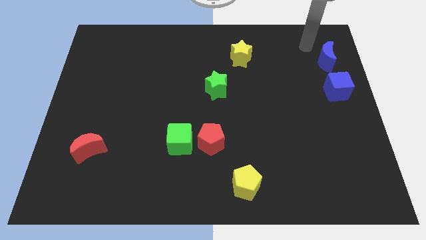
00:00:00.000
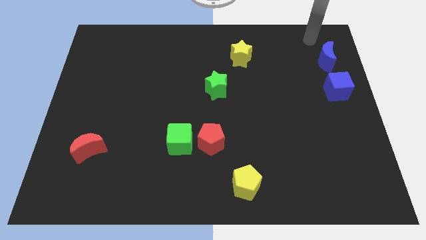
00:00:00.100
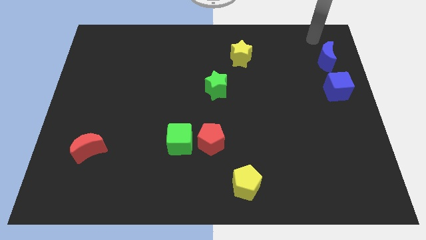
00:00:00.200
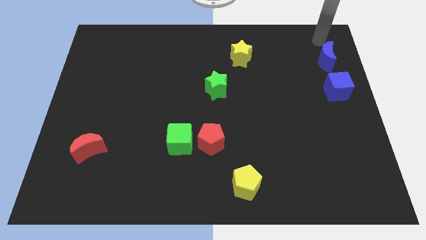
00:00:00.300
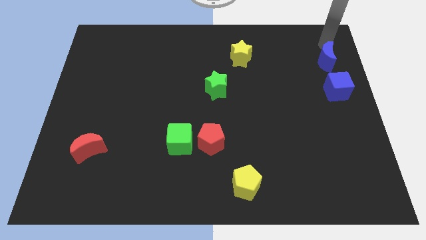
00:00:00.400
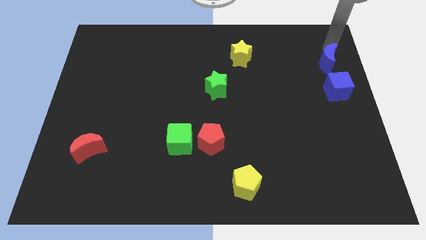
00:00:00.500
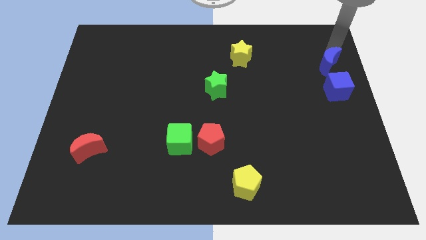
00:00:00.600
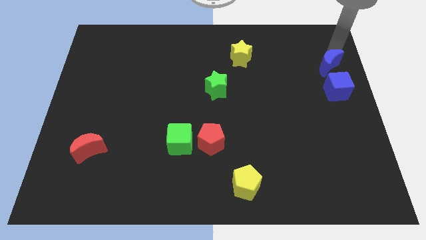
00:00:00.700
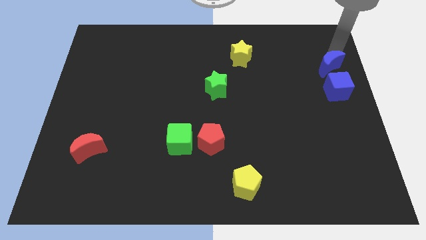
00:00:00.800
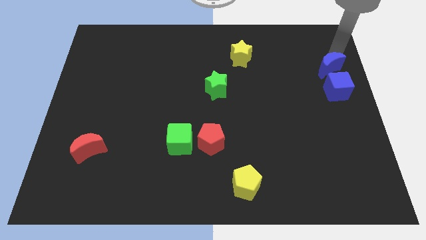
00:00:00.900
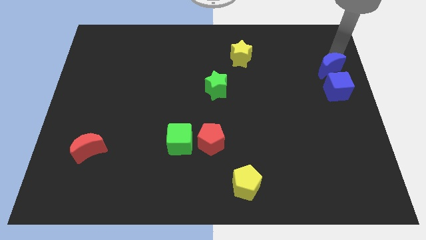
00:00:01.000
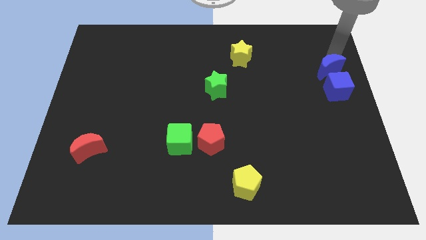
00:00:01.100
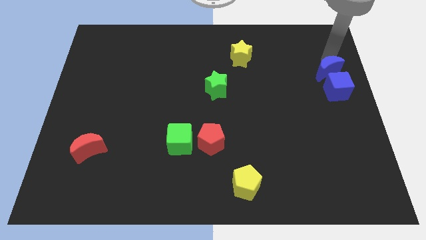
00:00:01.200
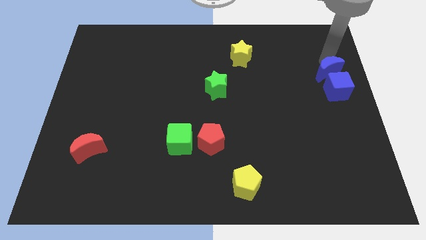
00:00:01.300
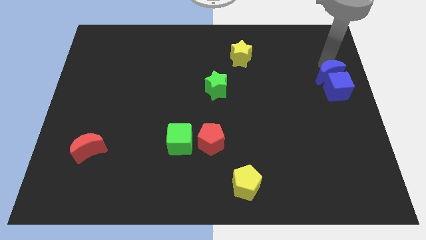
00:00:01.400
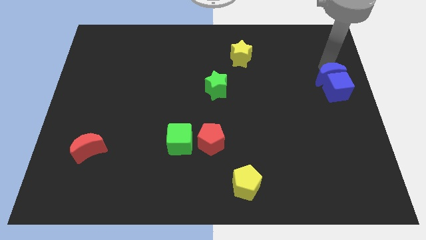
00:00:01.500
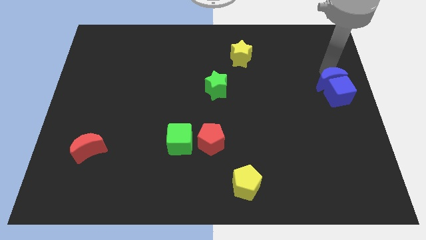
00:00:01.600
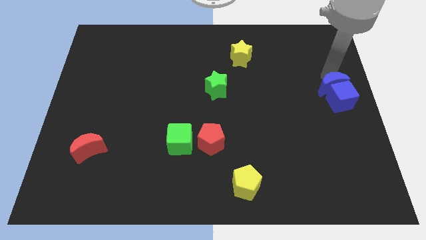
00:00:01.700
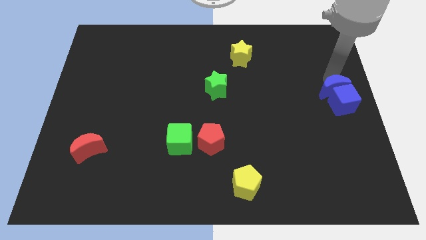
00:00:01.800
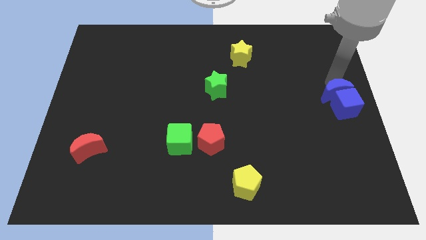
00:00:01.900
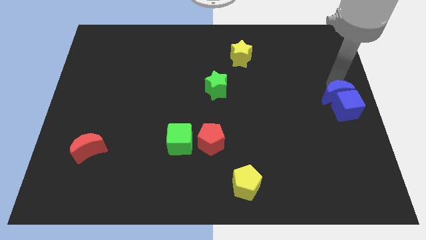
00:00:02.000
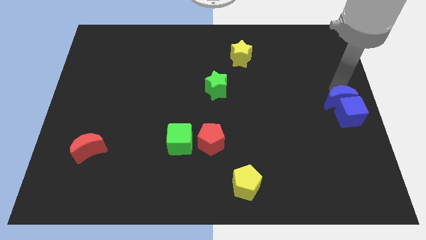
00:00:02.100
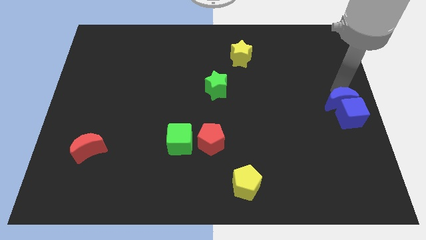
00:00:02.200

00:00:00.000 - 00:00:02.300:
push the blue blocks towards the bottom side

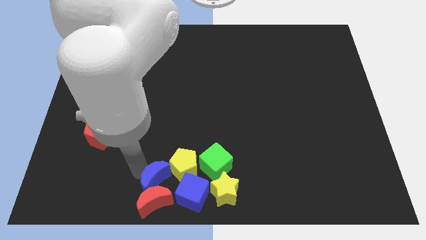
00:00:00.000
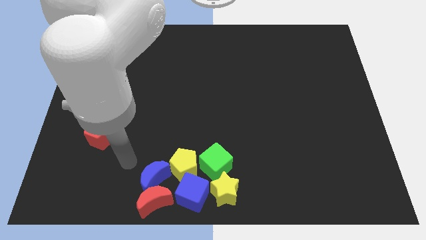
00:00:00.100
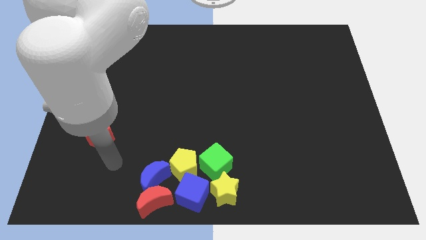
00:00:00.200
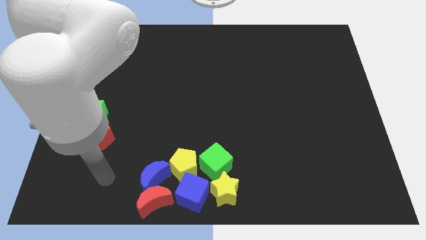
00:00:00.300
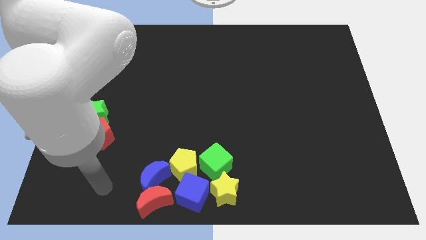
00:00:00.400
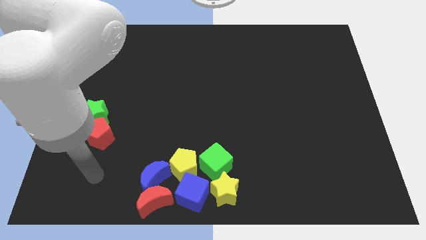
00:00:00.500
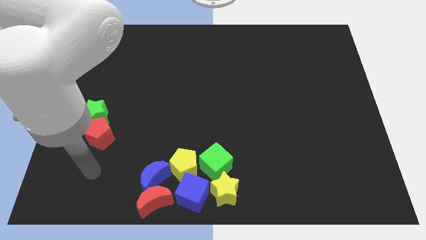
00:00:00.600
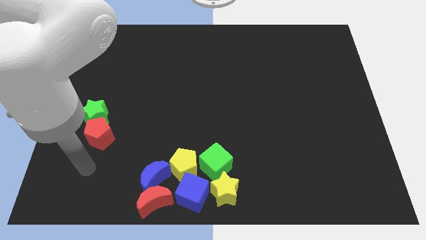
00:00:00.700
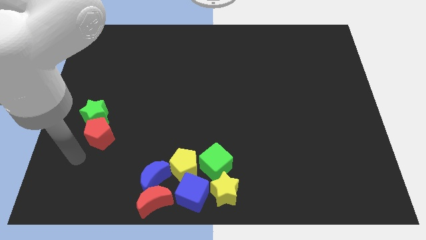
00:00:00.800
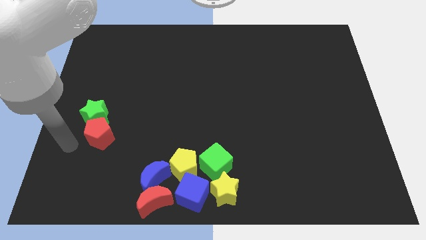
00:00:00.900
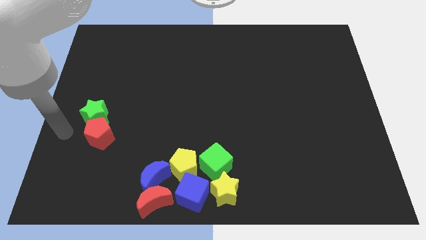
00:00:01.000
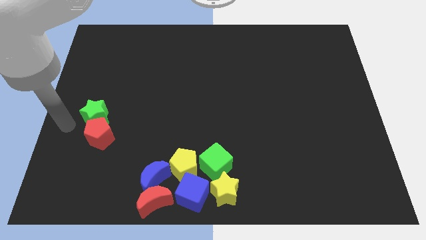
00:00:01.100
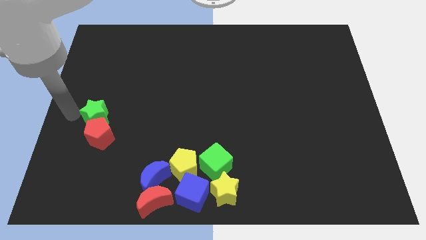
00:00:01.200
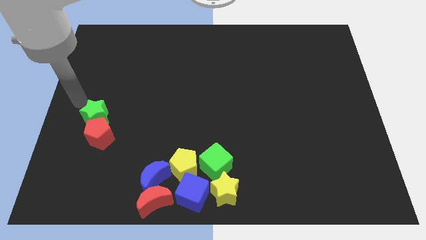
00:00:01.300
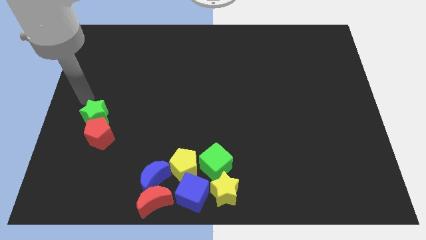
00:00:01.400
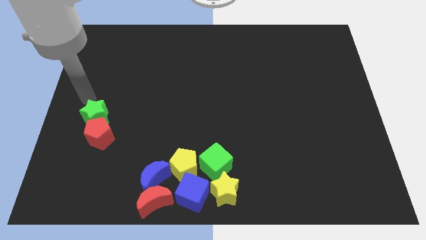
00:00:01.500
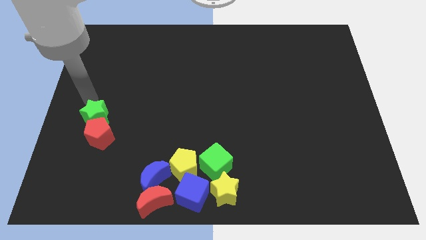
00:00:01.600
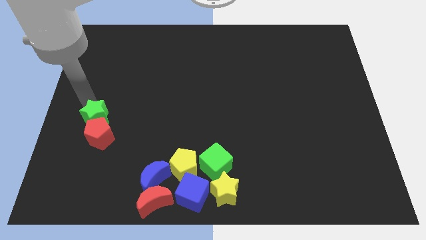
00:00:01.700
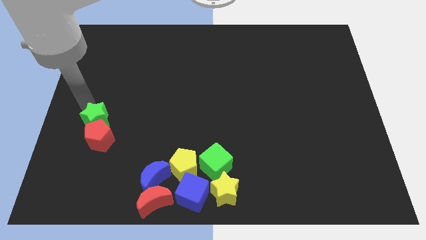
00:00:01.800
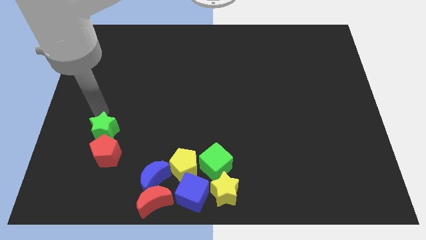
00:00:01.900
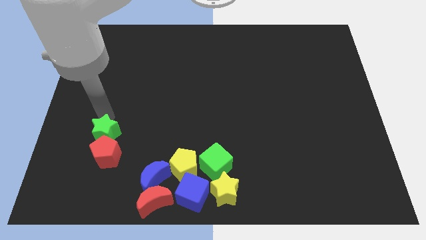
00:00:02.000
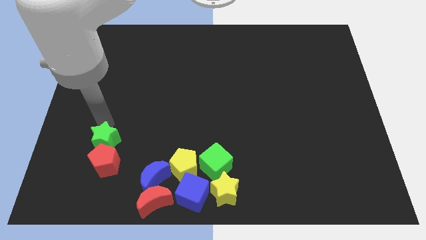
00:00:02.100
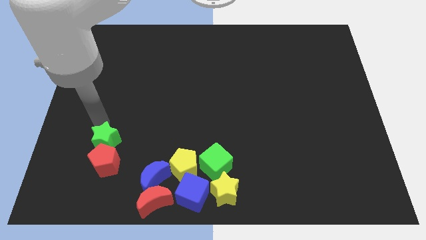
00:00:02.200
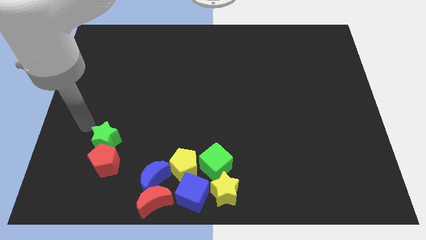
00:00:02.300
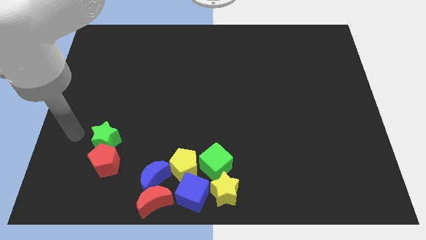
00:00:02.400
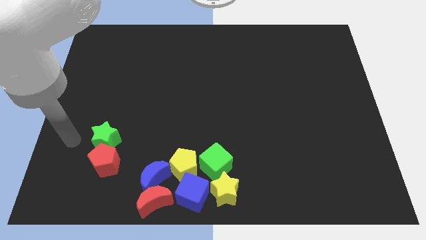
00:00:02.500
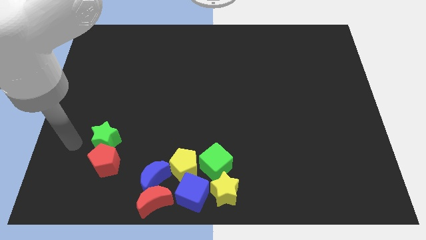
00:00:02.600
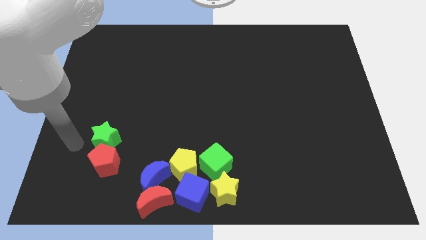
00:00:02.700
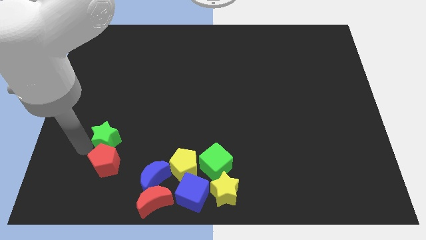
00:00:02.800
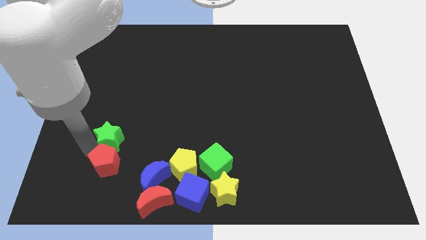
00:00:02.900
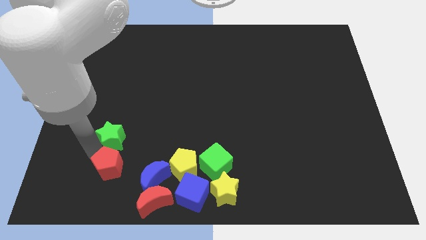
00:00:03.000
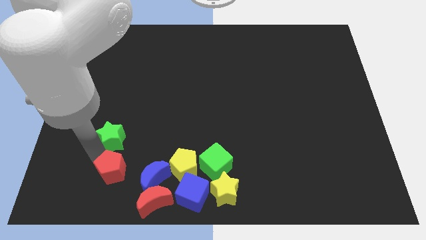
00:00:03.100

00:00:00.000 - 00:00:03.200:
push the green star and red pentagon together towards the group of blocks

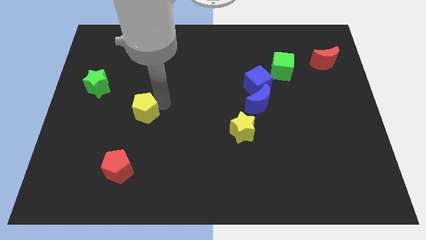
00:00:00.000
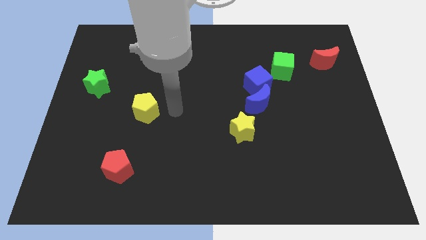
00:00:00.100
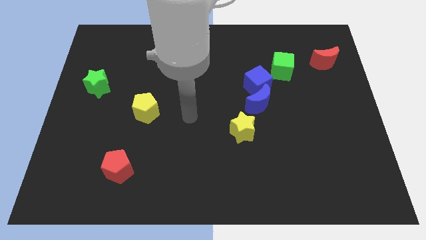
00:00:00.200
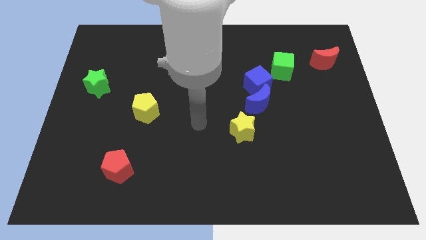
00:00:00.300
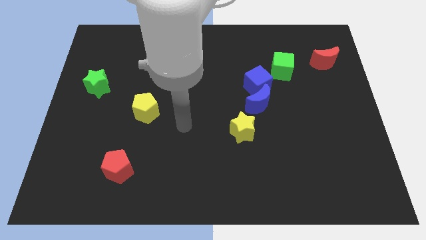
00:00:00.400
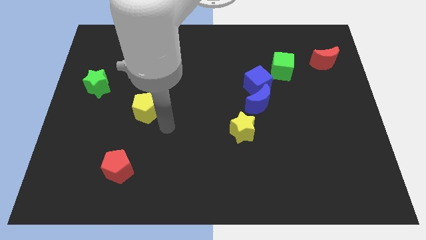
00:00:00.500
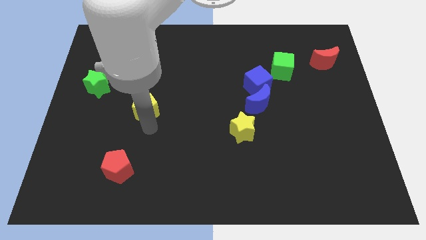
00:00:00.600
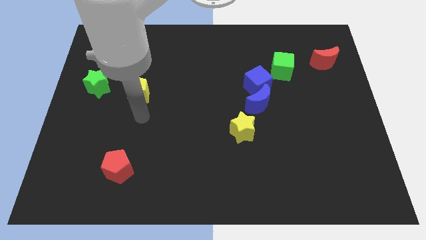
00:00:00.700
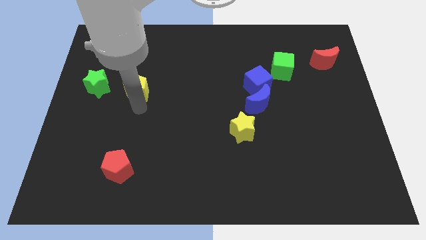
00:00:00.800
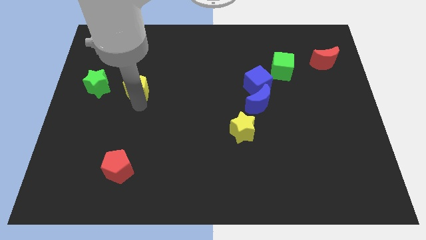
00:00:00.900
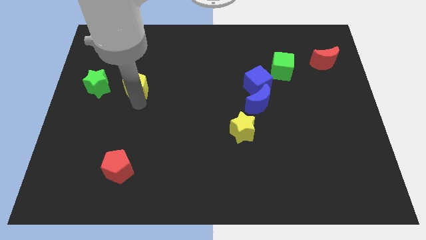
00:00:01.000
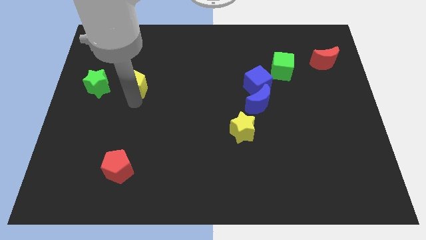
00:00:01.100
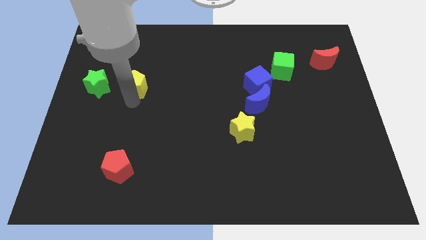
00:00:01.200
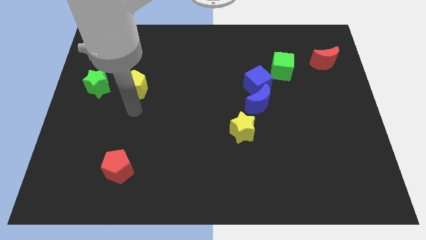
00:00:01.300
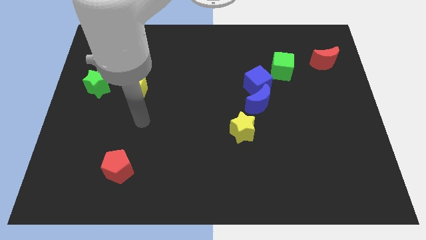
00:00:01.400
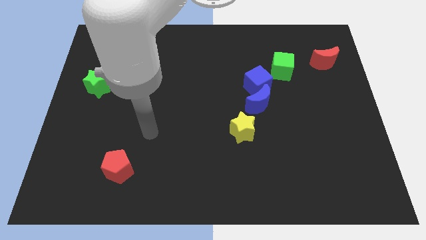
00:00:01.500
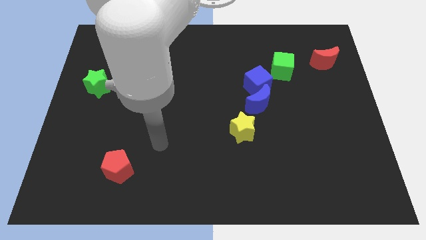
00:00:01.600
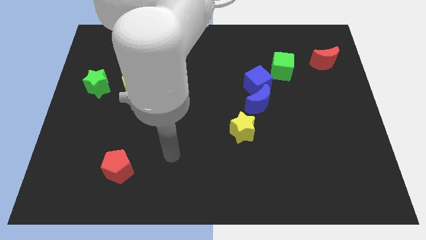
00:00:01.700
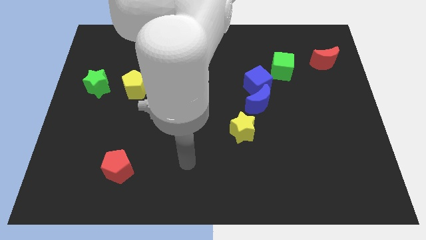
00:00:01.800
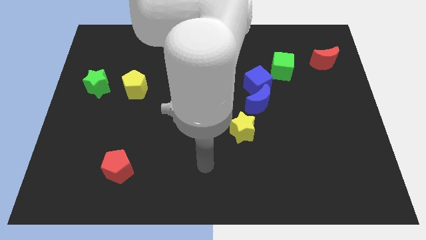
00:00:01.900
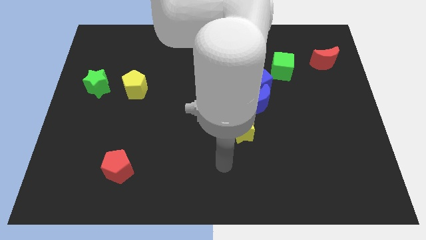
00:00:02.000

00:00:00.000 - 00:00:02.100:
place the yellow pentagon right to the green star

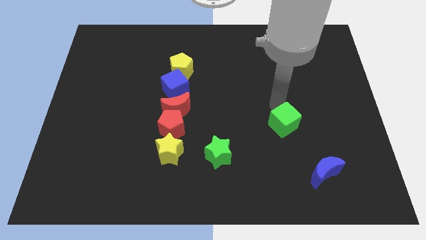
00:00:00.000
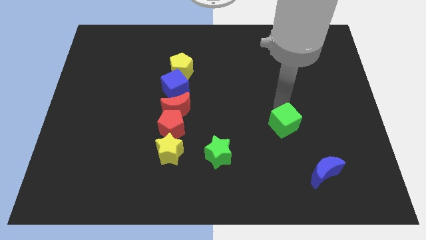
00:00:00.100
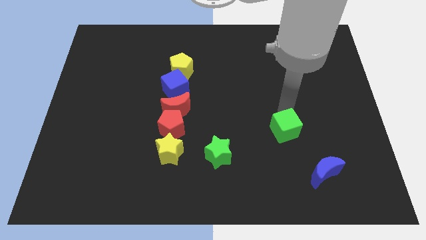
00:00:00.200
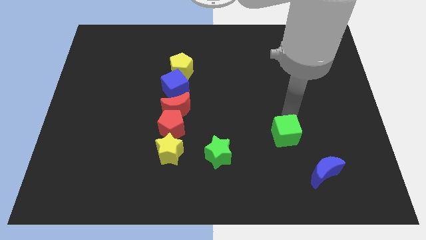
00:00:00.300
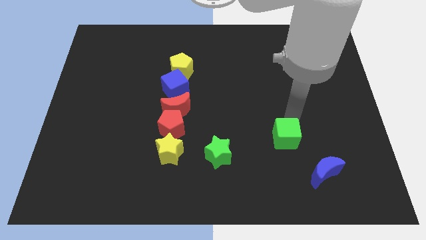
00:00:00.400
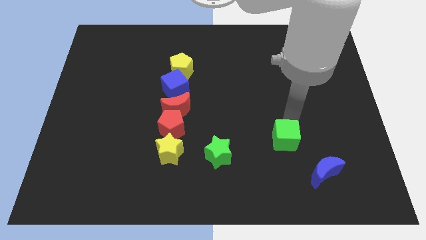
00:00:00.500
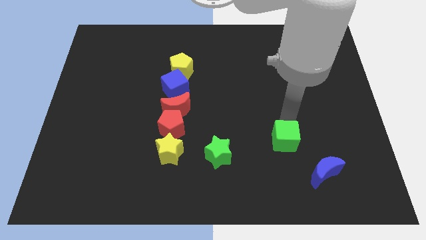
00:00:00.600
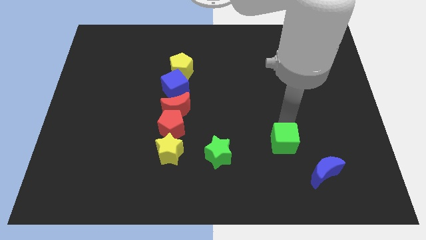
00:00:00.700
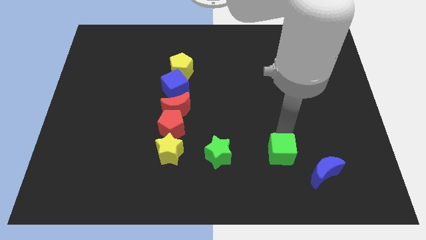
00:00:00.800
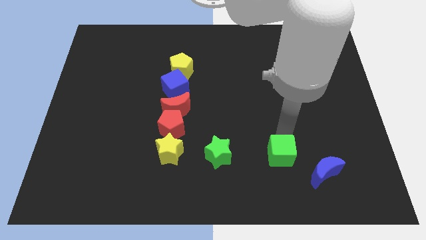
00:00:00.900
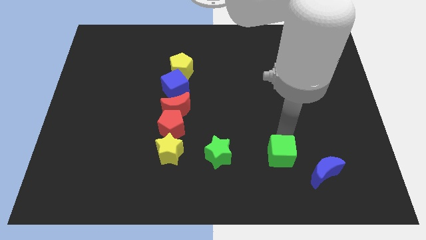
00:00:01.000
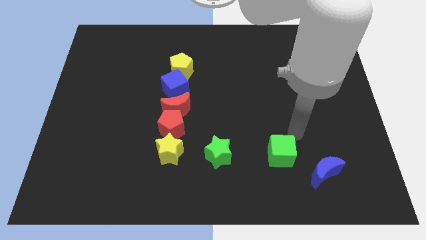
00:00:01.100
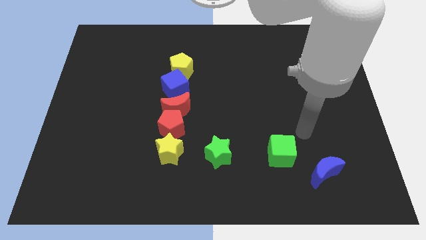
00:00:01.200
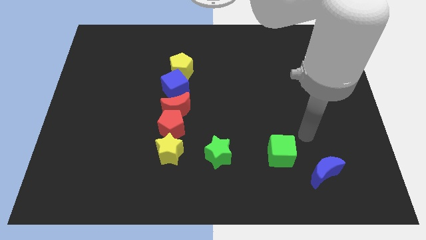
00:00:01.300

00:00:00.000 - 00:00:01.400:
push the green cube to the right of the green star
